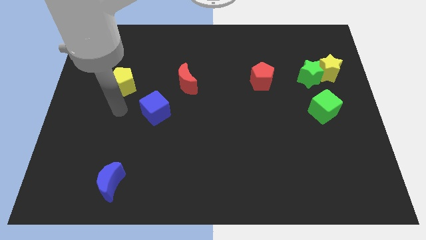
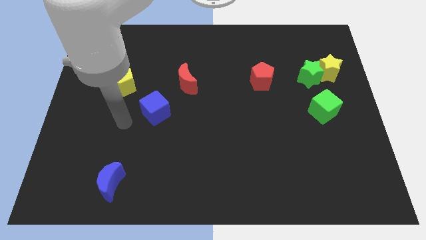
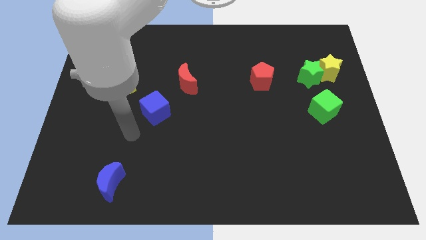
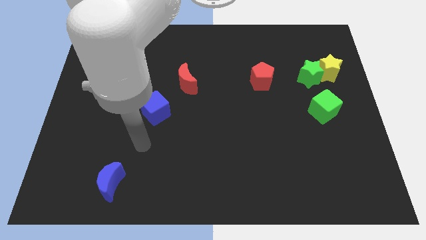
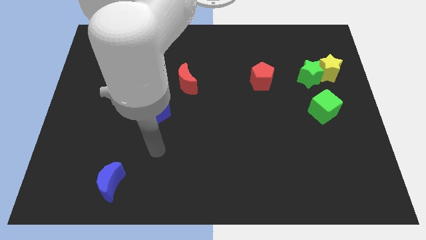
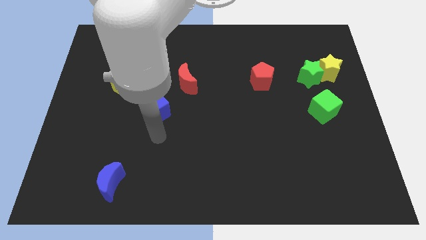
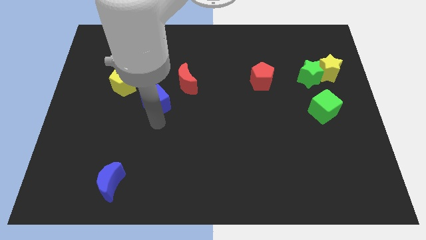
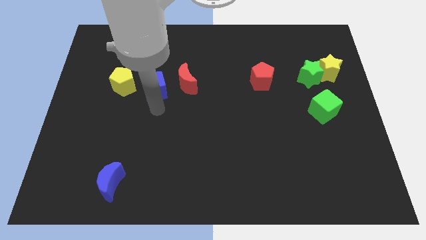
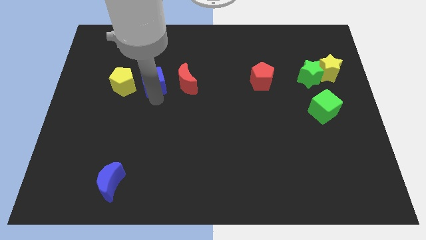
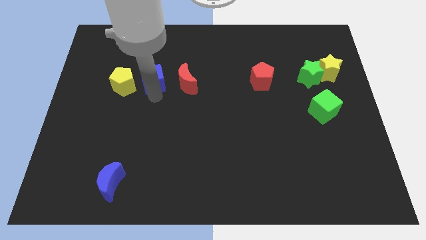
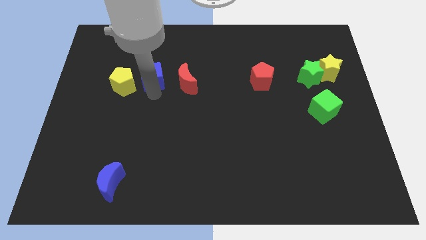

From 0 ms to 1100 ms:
push the blue cube to the top of the board

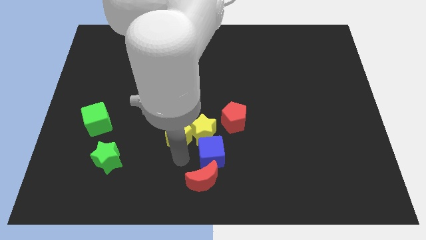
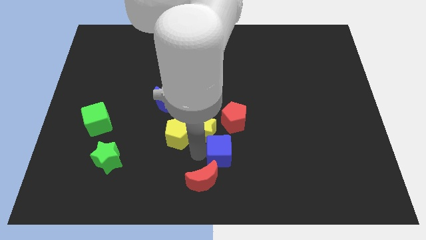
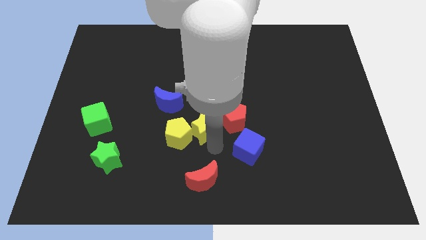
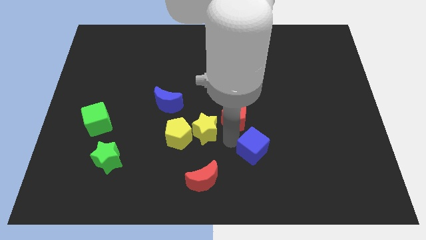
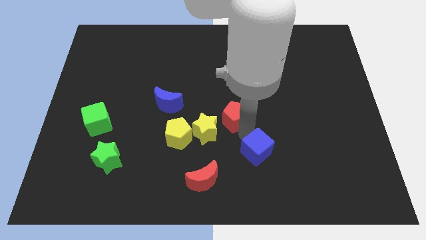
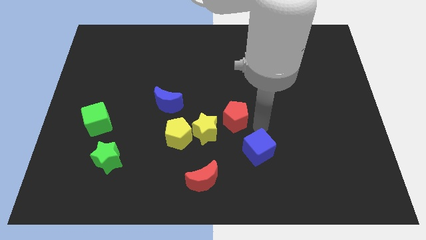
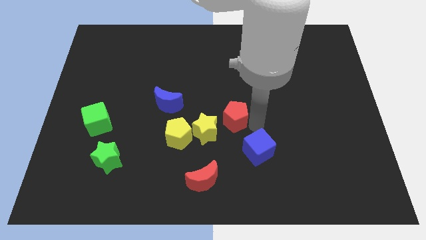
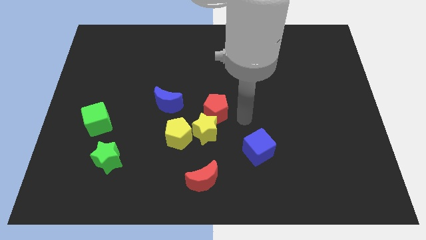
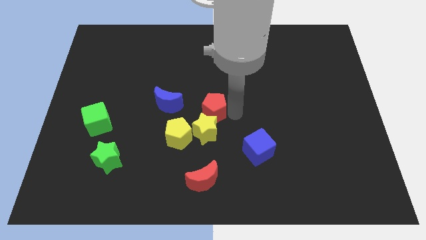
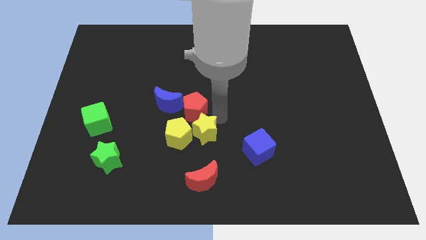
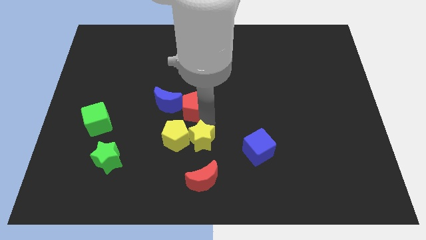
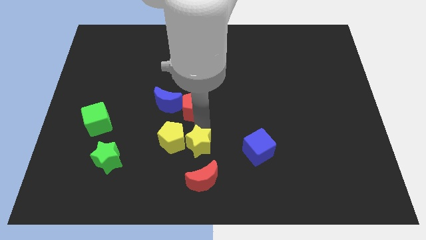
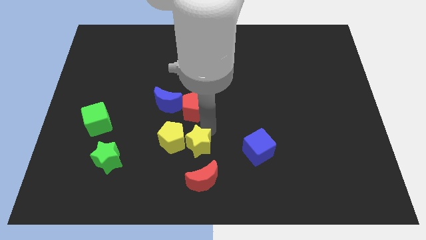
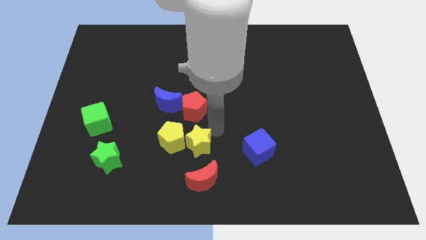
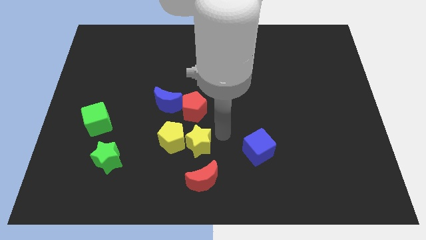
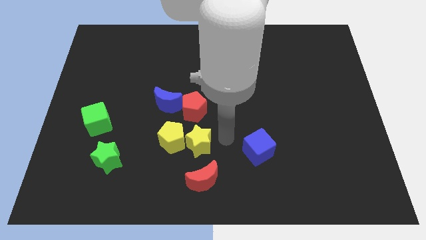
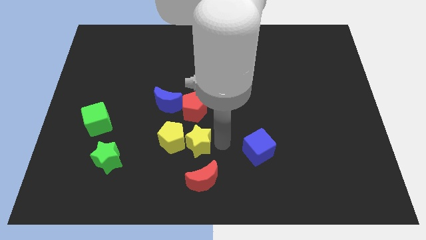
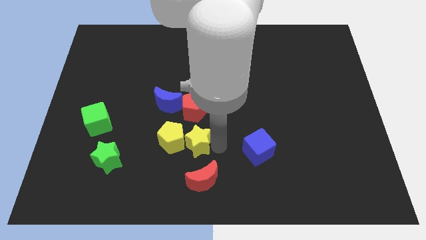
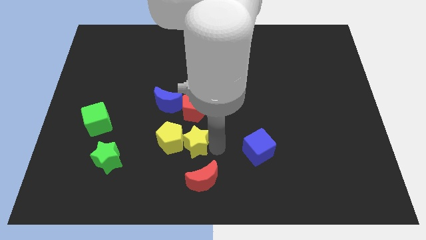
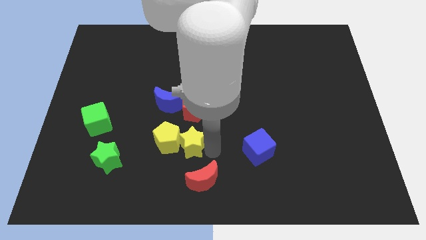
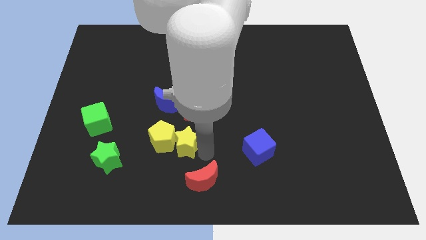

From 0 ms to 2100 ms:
move the blue cube parallel to the right side of the yellow star

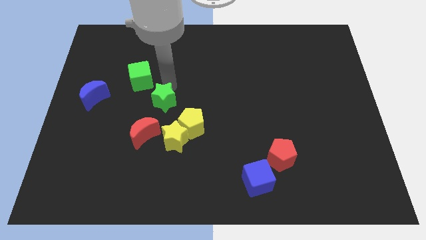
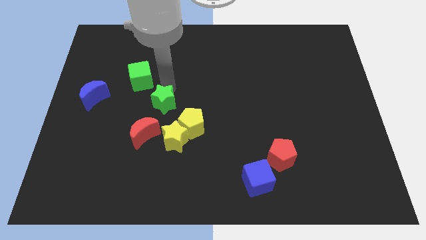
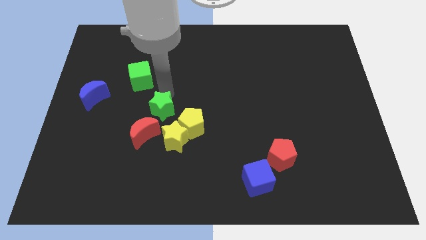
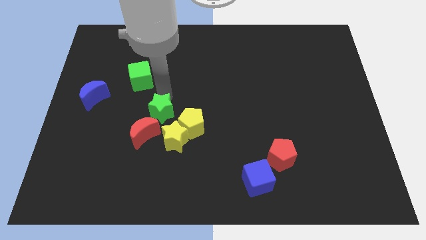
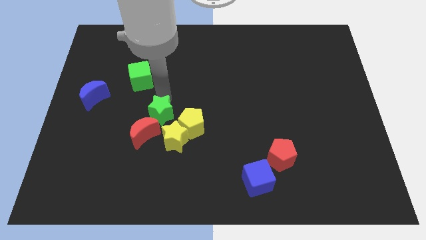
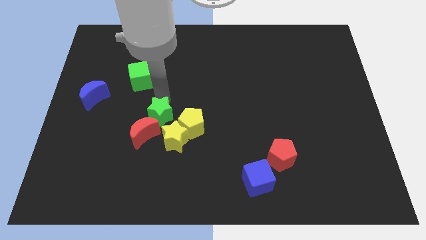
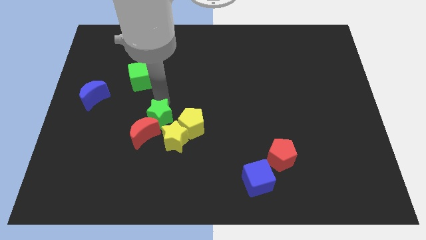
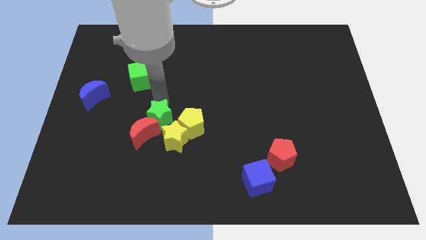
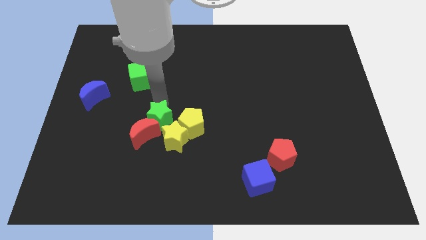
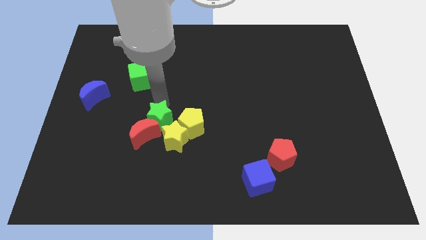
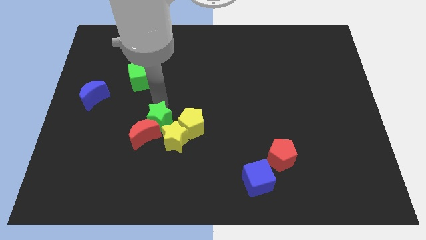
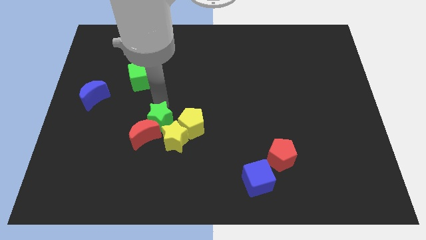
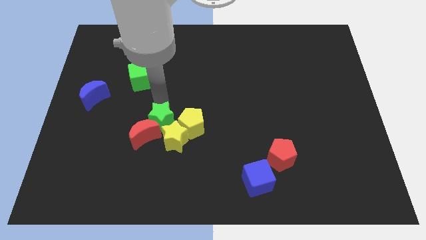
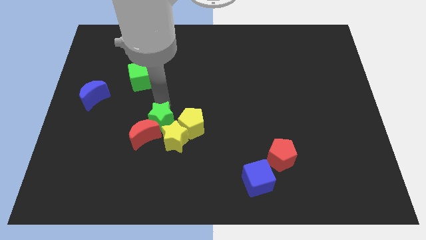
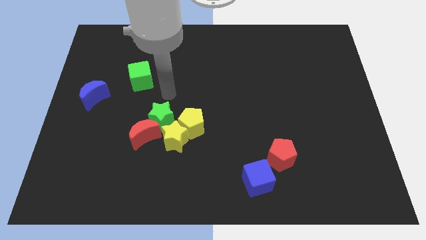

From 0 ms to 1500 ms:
move the green star into the red moon

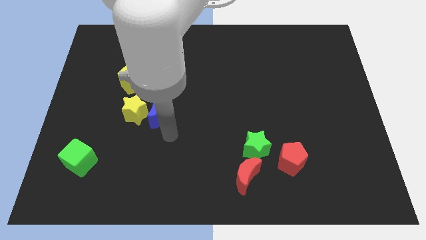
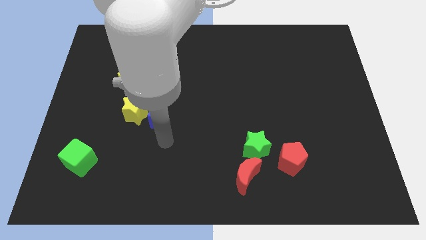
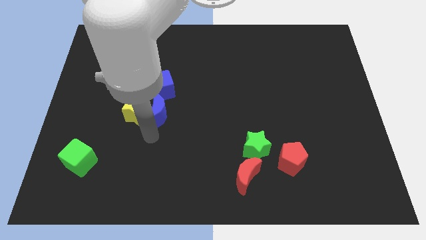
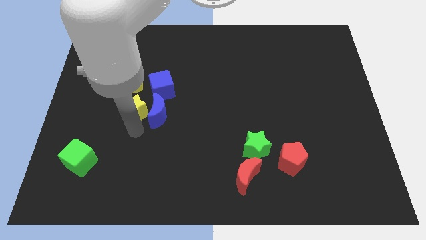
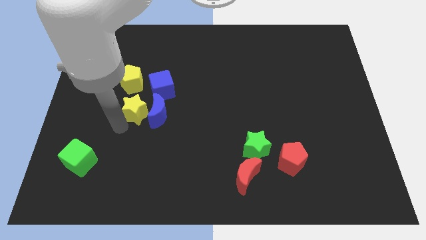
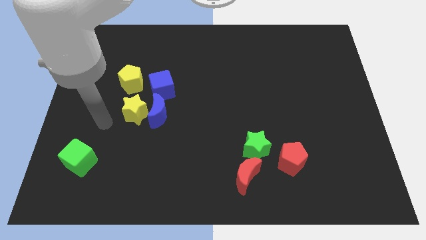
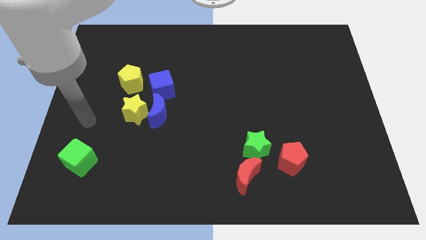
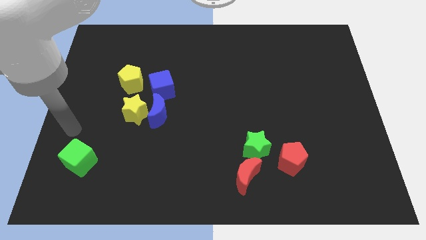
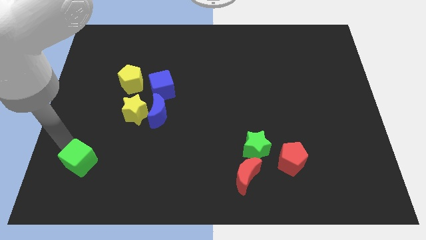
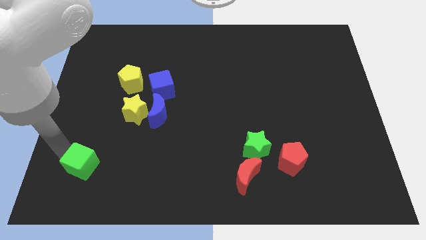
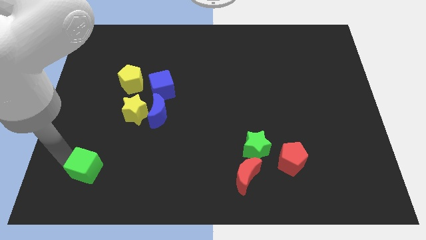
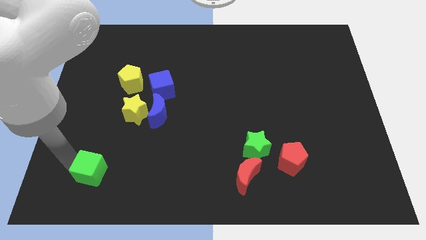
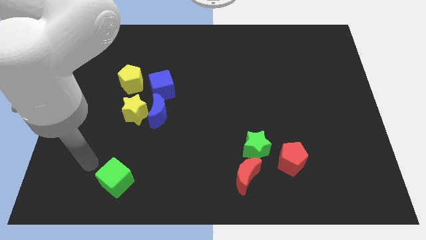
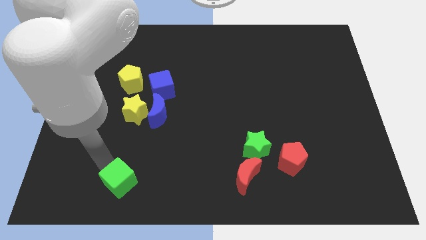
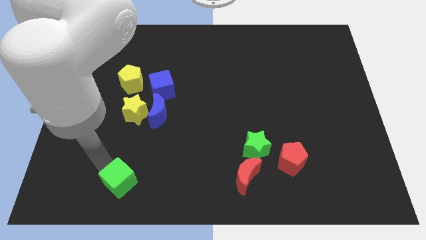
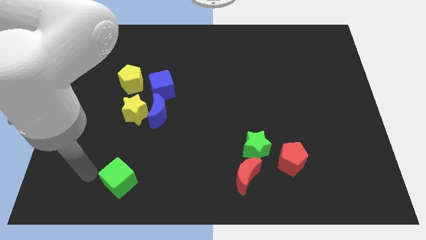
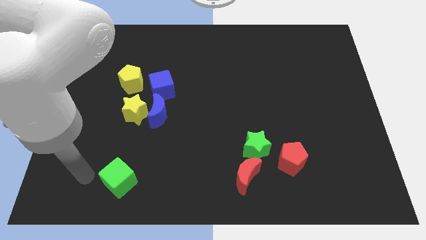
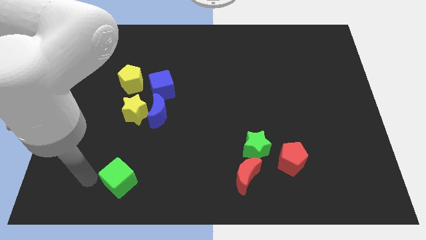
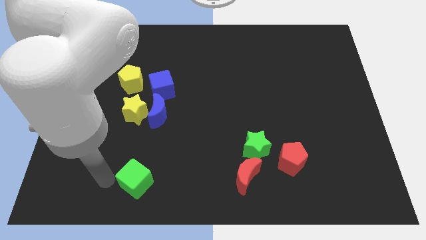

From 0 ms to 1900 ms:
place the green cube below to the yellow star

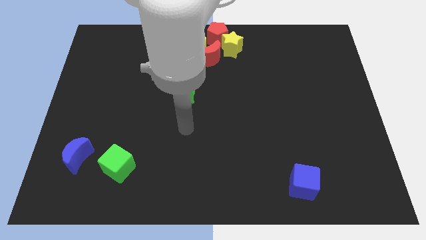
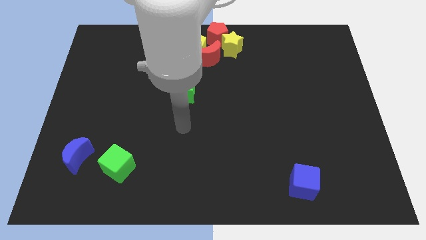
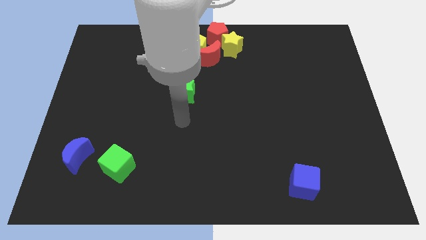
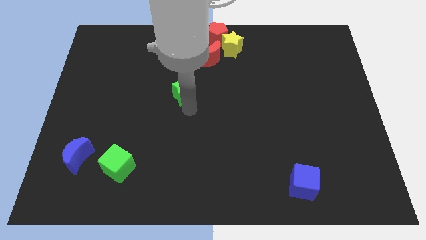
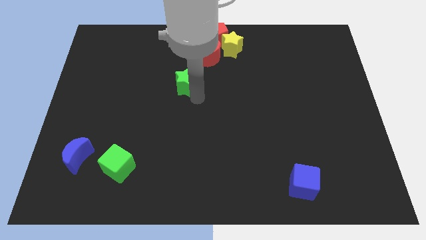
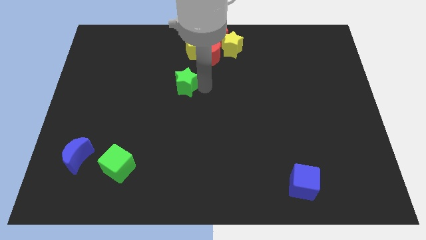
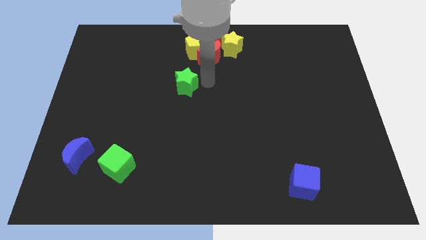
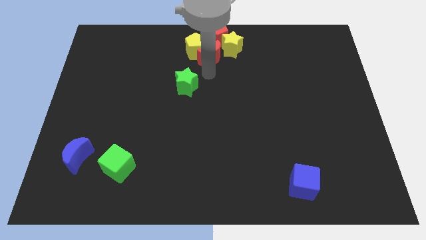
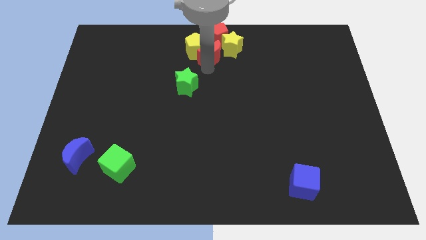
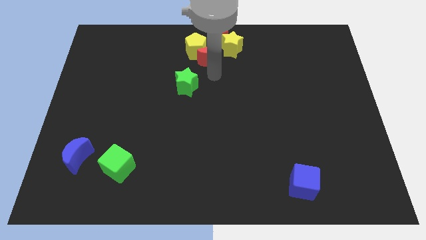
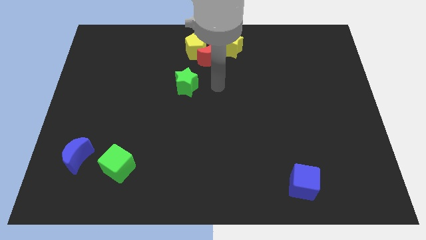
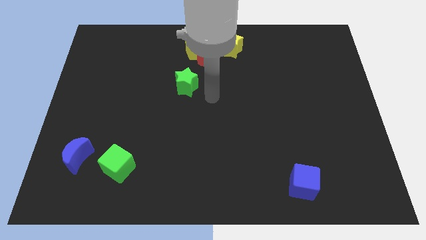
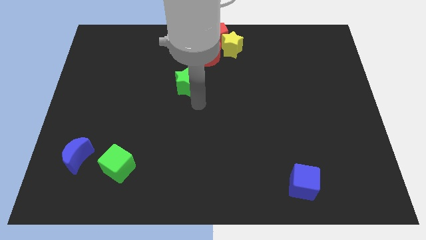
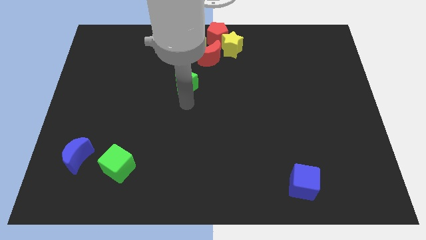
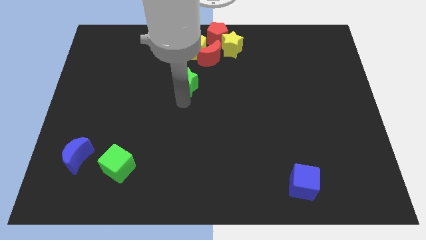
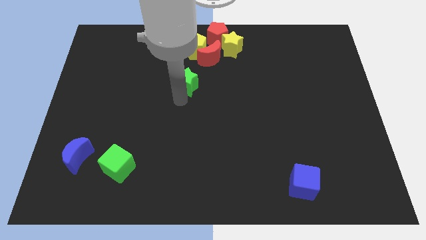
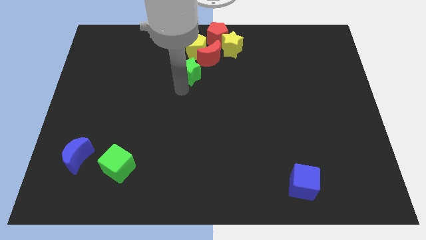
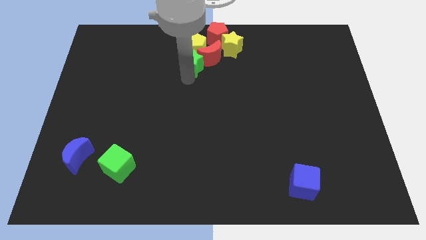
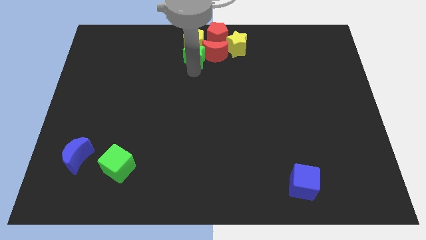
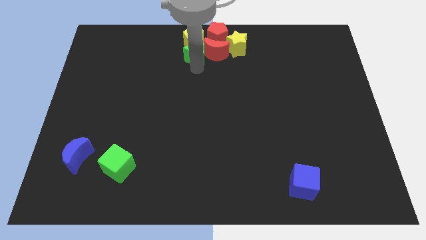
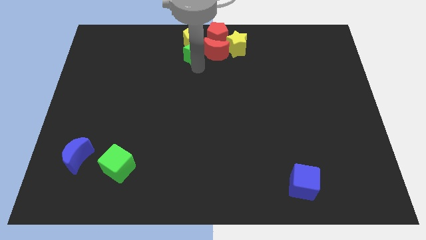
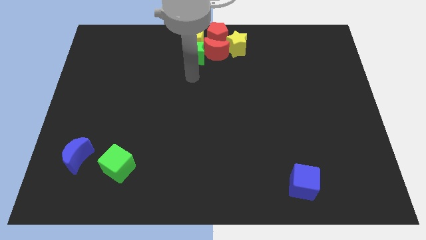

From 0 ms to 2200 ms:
place green star below the yellow pentagon
